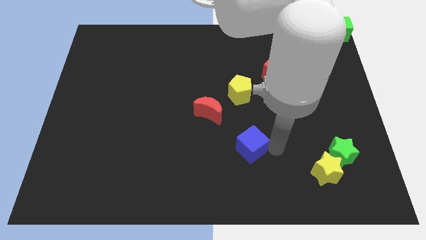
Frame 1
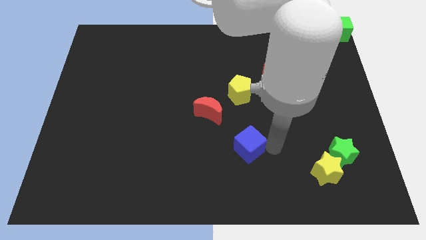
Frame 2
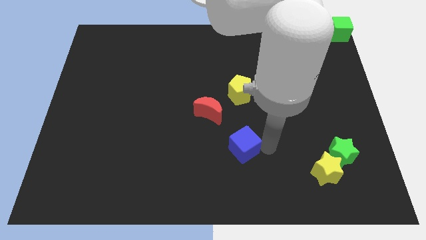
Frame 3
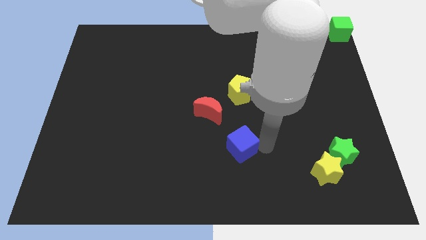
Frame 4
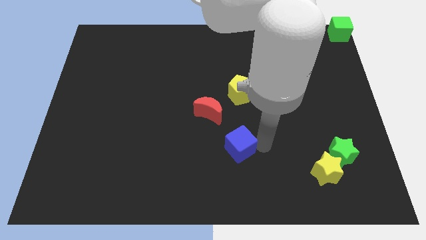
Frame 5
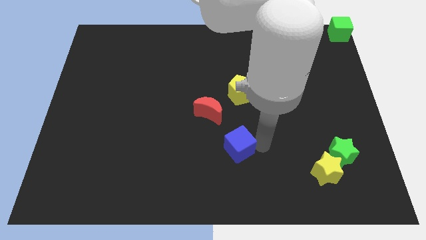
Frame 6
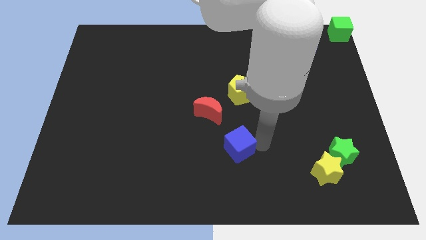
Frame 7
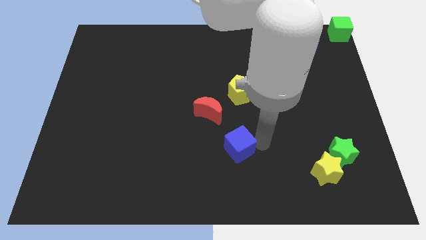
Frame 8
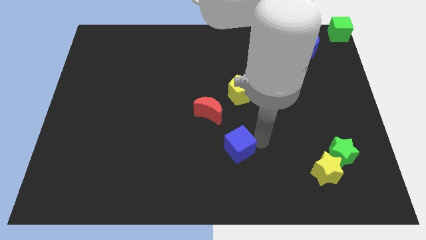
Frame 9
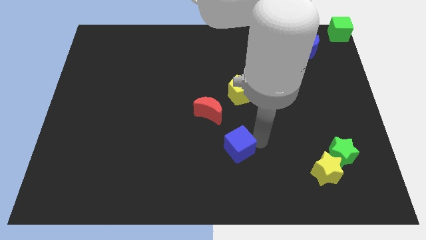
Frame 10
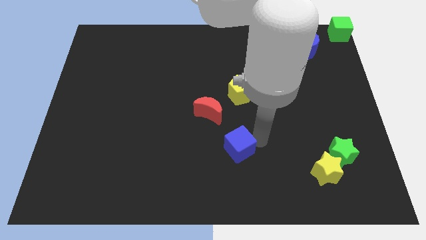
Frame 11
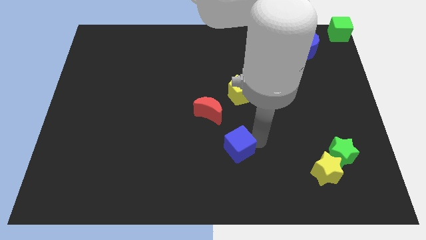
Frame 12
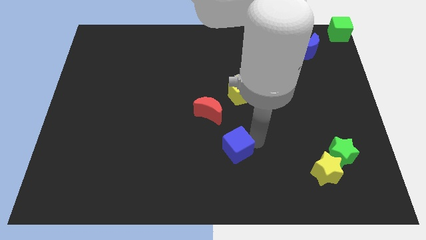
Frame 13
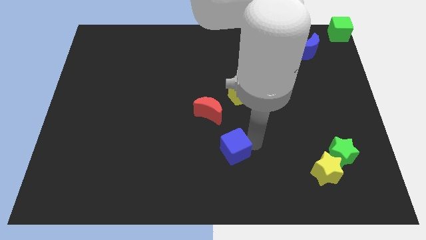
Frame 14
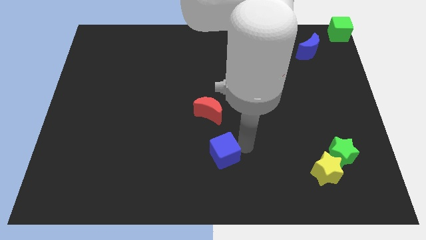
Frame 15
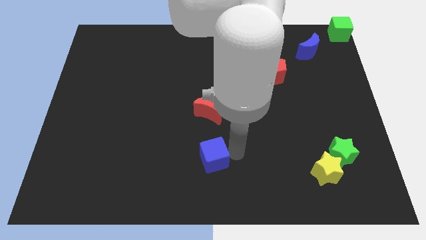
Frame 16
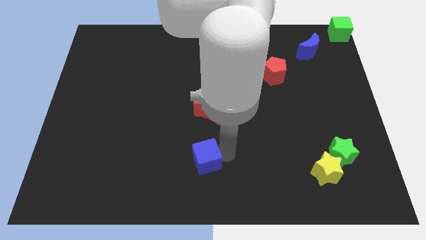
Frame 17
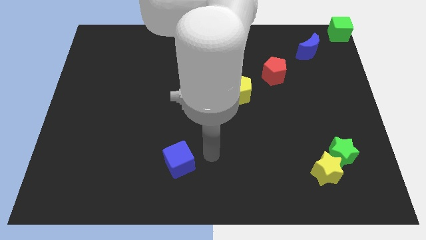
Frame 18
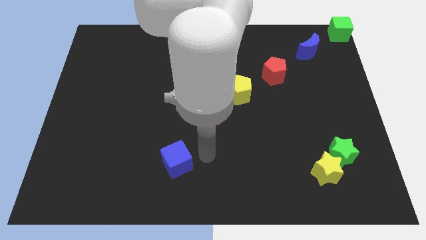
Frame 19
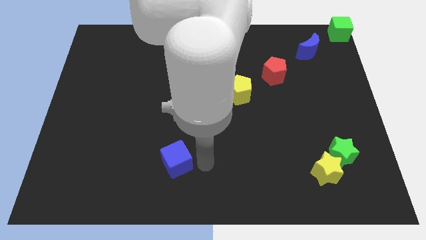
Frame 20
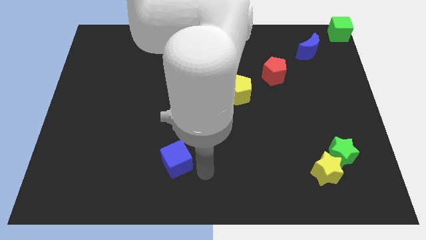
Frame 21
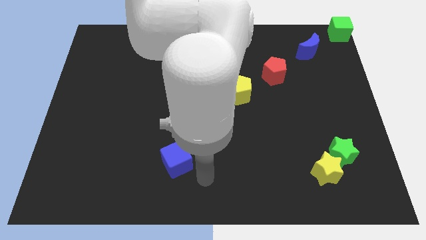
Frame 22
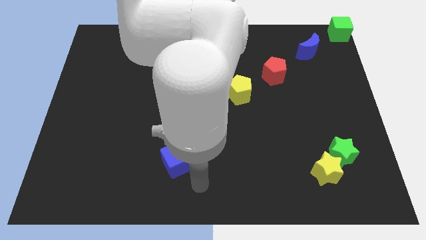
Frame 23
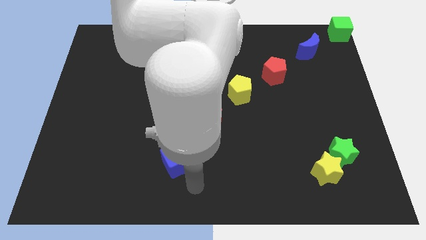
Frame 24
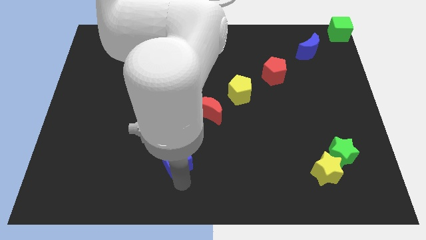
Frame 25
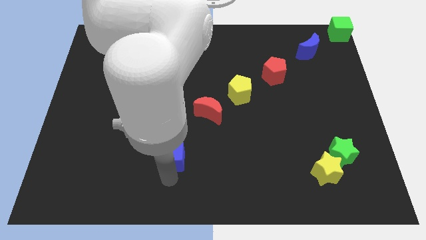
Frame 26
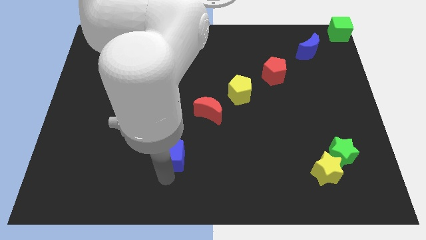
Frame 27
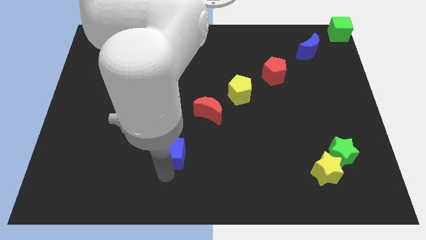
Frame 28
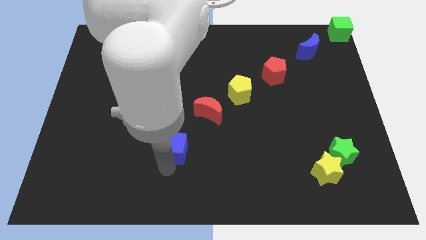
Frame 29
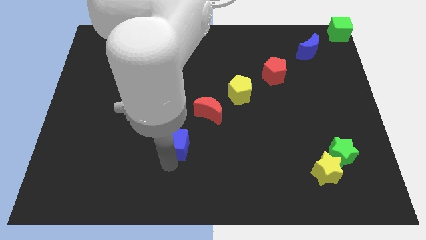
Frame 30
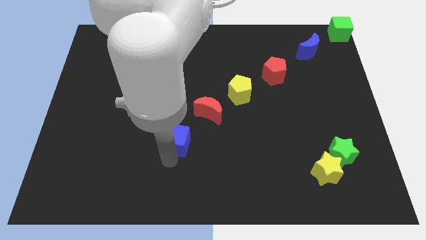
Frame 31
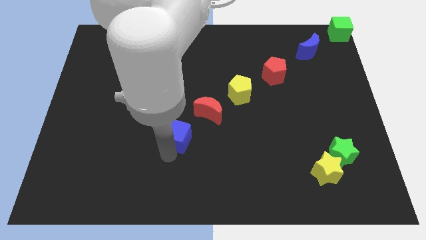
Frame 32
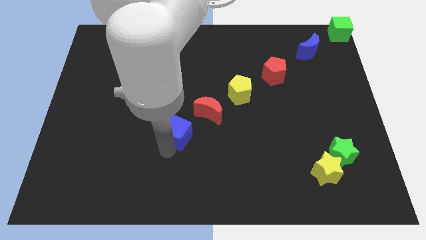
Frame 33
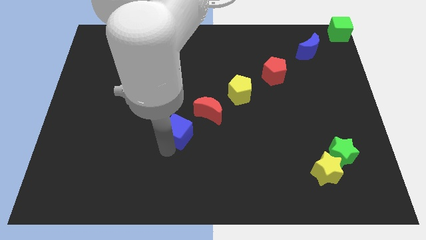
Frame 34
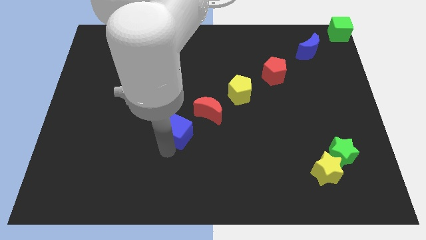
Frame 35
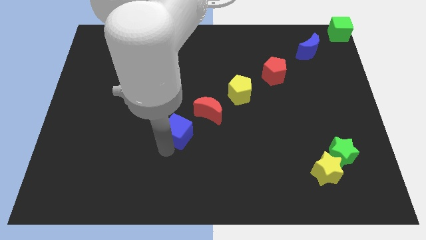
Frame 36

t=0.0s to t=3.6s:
place the blue cube diagonal to the red moon

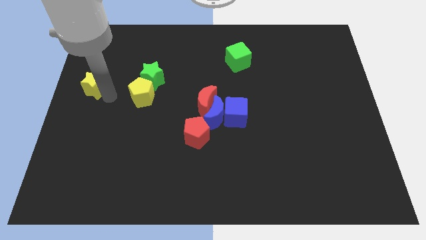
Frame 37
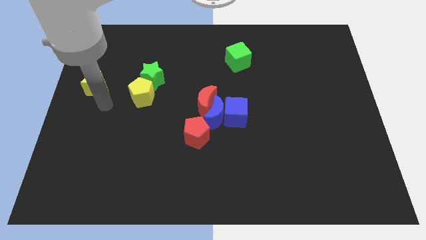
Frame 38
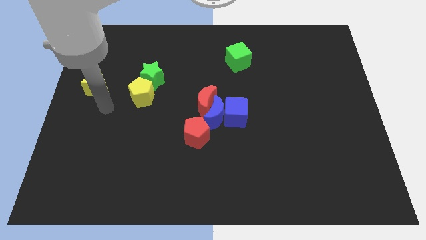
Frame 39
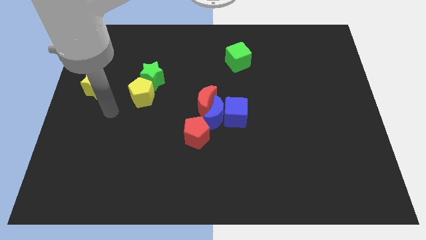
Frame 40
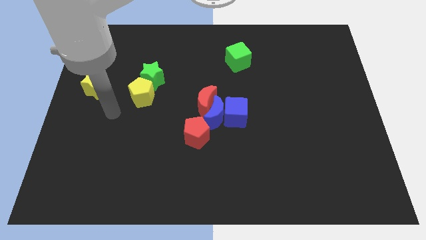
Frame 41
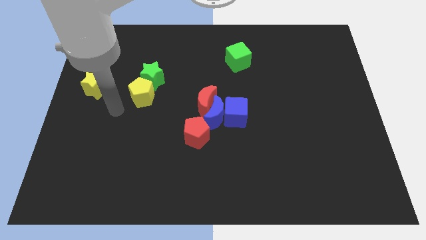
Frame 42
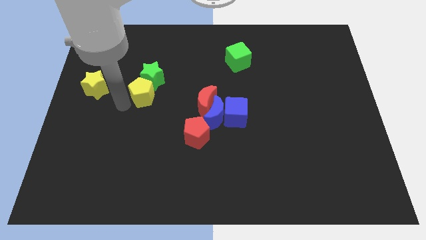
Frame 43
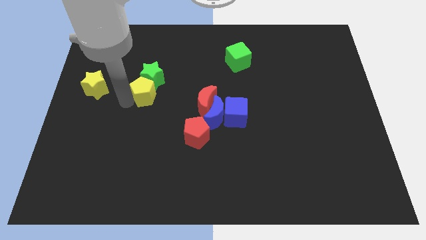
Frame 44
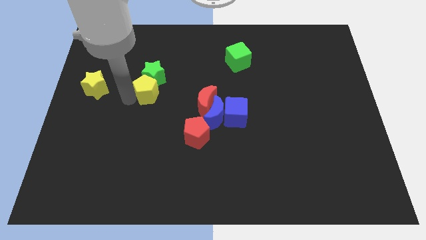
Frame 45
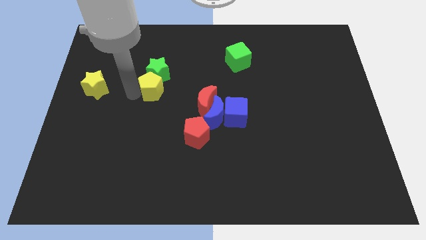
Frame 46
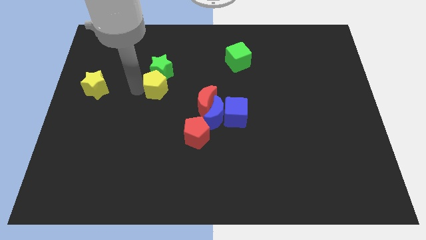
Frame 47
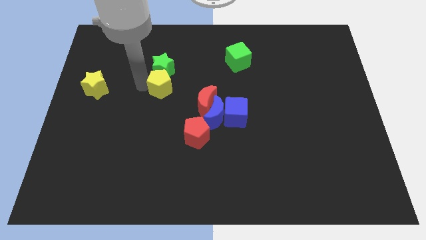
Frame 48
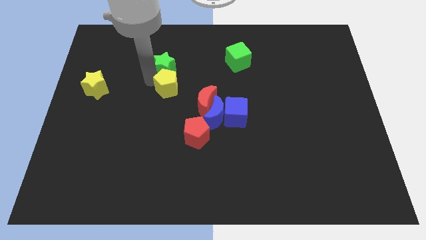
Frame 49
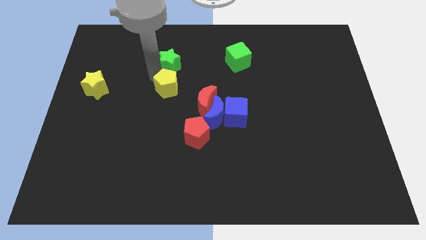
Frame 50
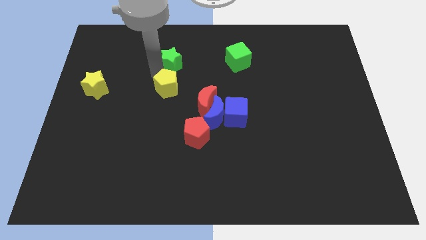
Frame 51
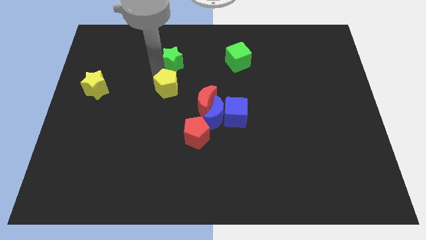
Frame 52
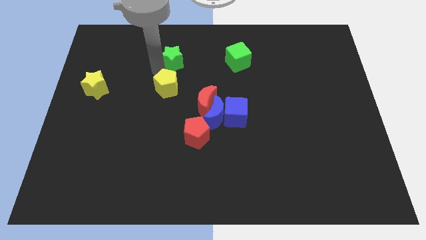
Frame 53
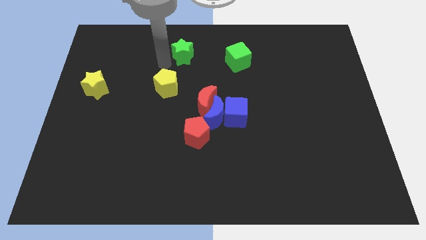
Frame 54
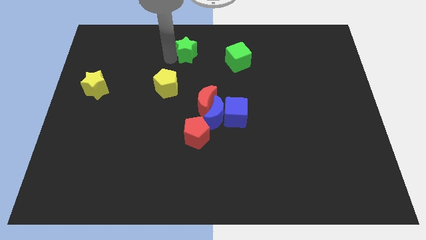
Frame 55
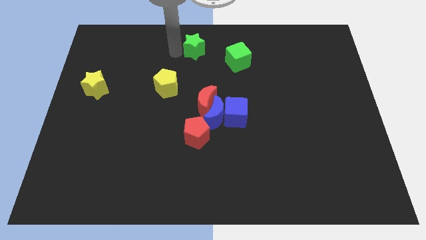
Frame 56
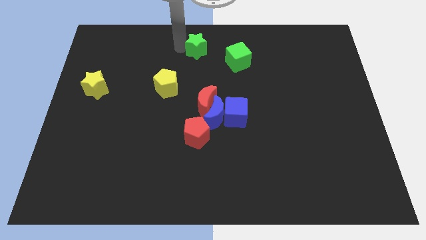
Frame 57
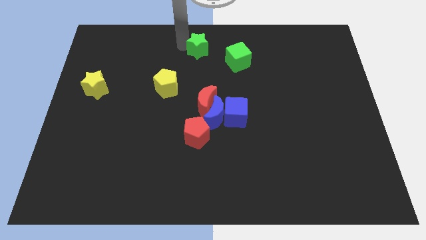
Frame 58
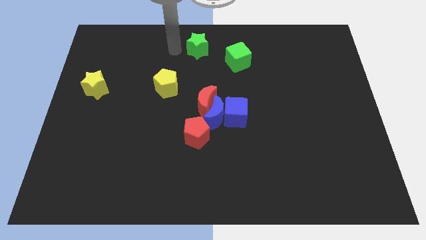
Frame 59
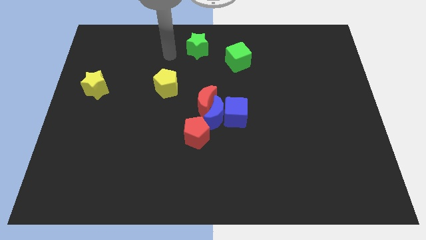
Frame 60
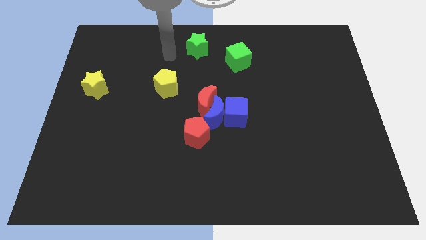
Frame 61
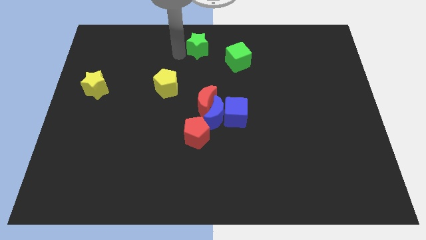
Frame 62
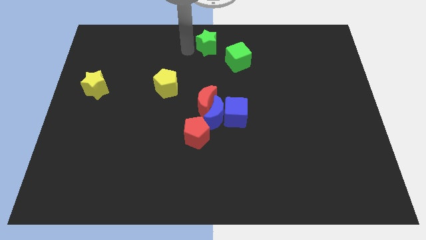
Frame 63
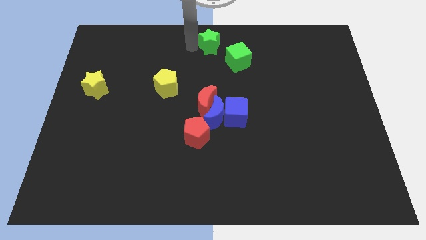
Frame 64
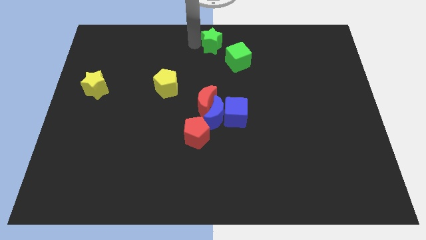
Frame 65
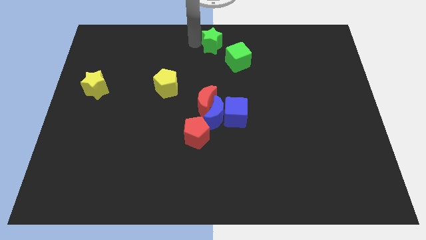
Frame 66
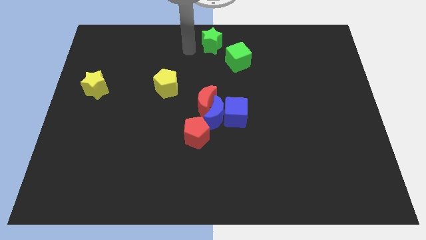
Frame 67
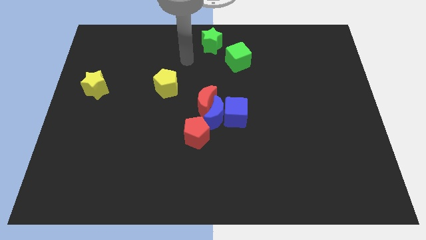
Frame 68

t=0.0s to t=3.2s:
push green star towards top of the board

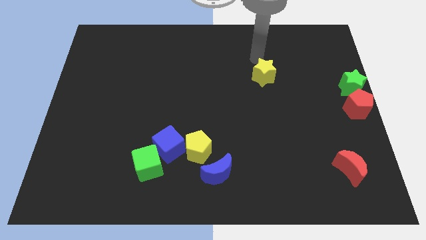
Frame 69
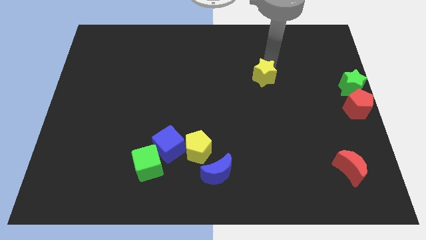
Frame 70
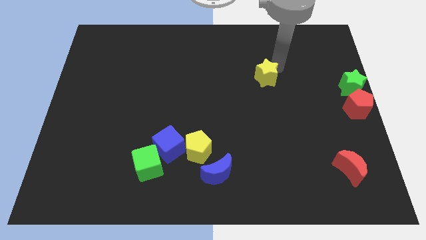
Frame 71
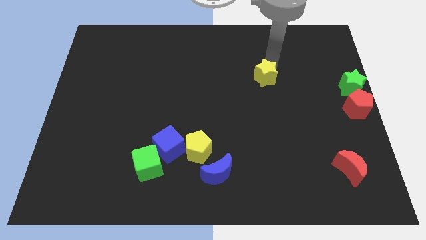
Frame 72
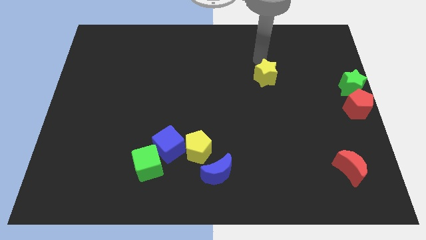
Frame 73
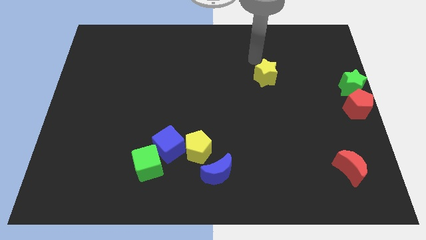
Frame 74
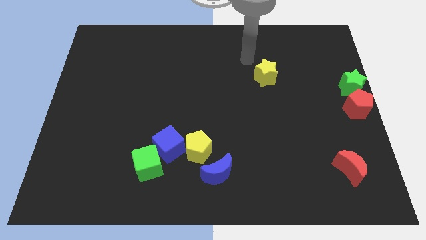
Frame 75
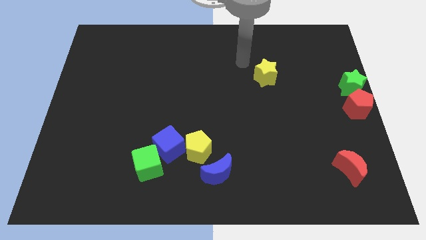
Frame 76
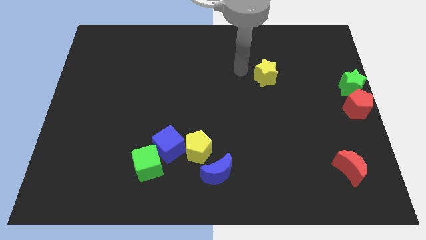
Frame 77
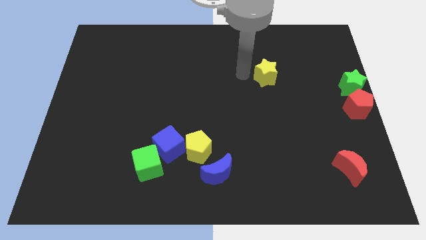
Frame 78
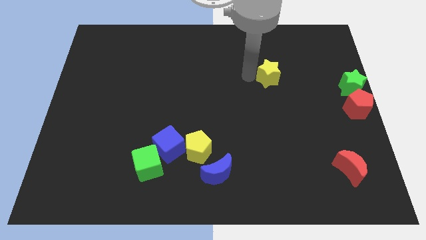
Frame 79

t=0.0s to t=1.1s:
move yellow star slightly right

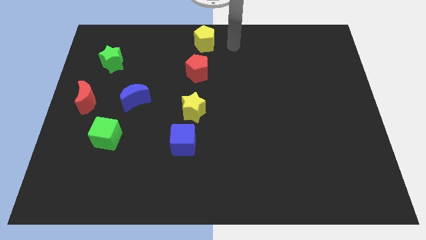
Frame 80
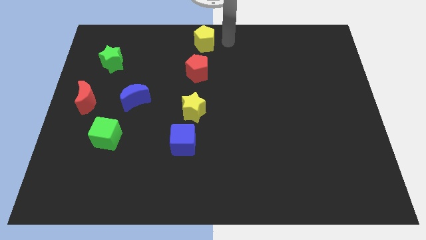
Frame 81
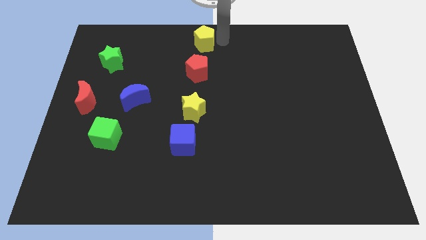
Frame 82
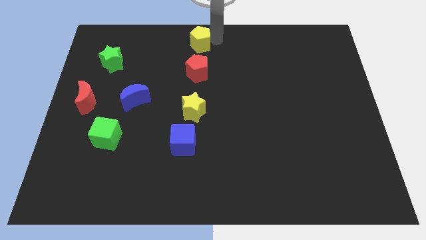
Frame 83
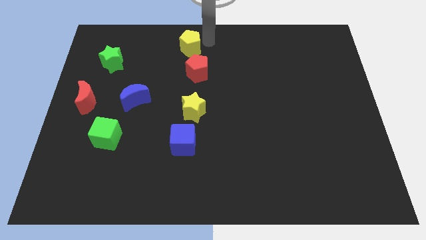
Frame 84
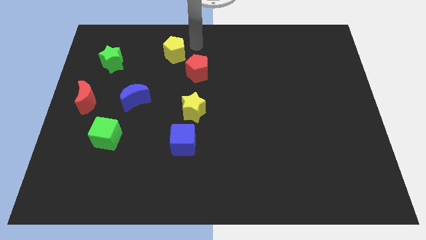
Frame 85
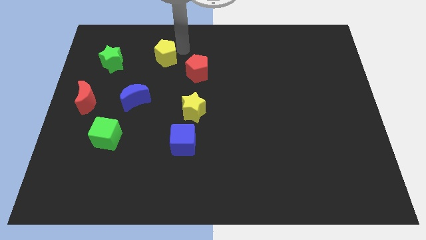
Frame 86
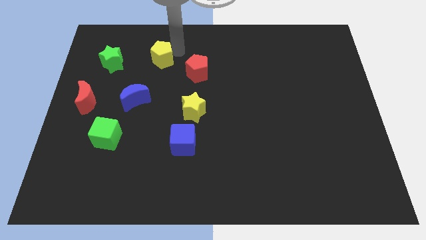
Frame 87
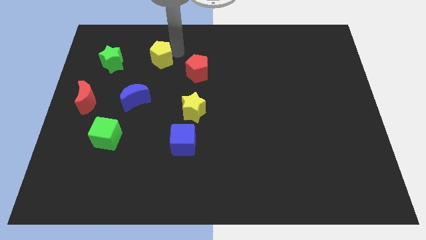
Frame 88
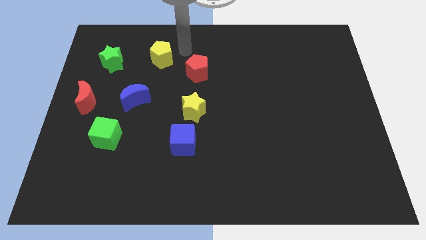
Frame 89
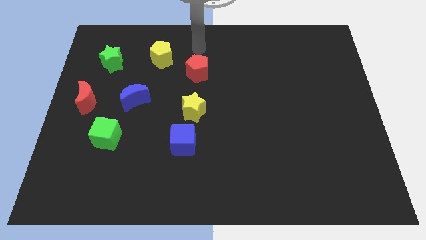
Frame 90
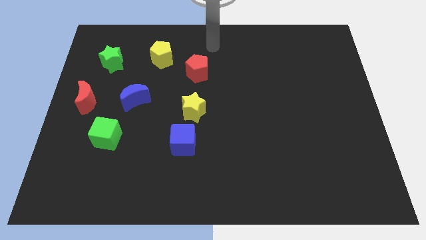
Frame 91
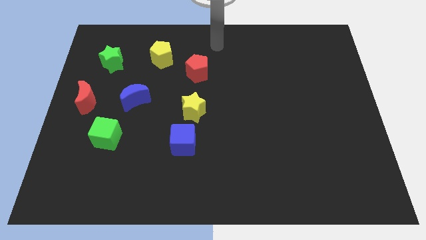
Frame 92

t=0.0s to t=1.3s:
place the yellow pentagon to the top of the blue moon
